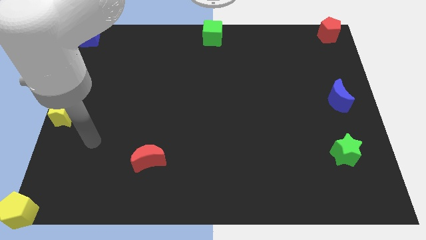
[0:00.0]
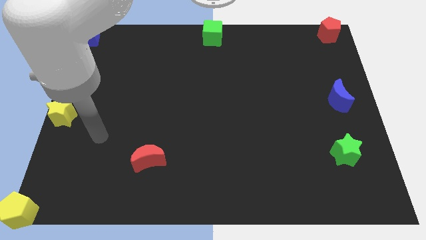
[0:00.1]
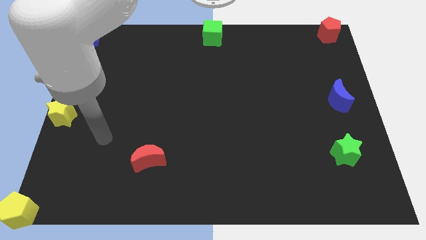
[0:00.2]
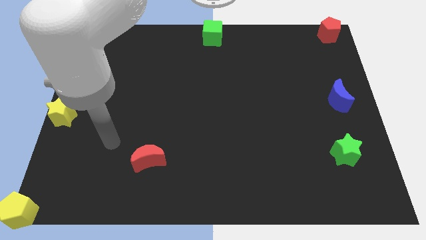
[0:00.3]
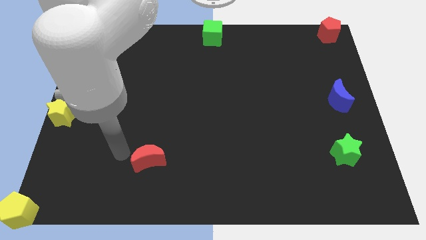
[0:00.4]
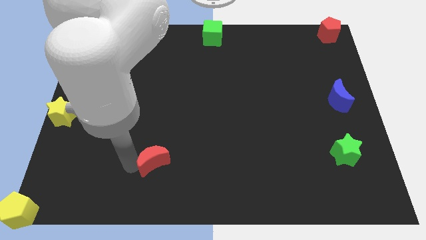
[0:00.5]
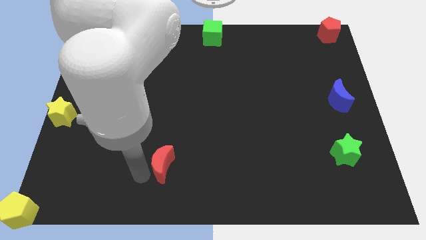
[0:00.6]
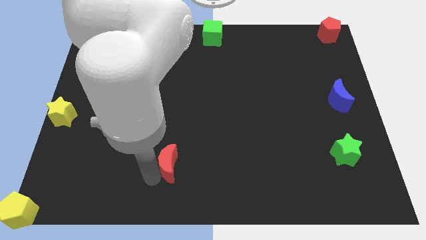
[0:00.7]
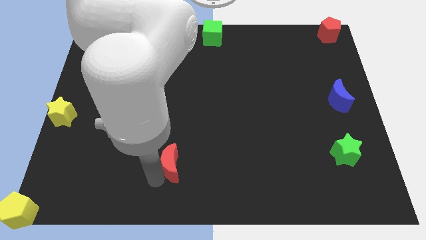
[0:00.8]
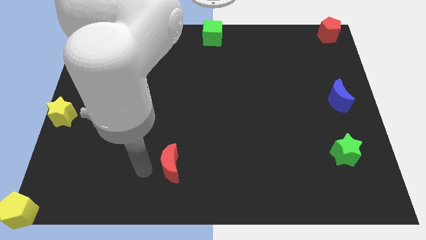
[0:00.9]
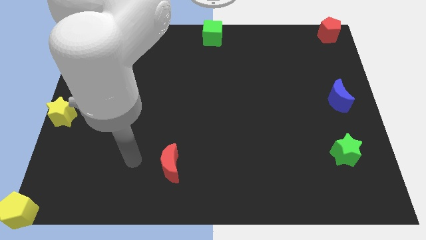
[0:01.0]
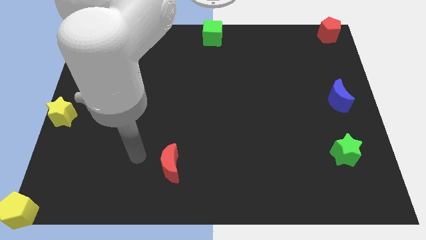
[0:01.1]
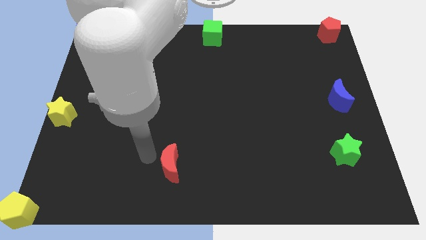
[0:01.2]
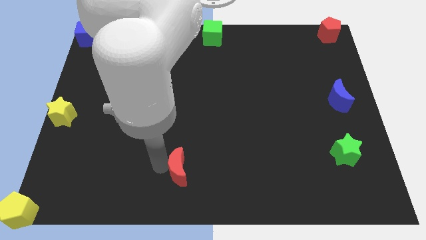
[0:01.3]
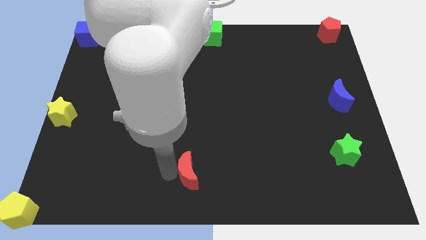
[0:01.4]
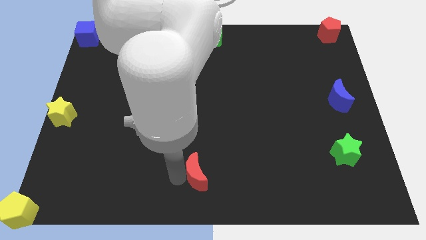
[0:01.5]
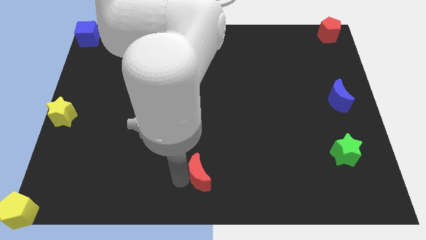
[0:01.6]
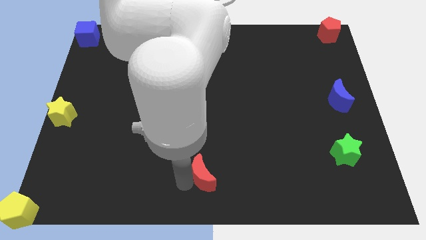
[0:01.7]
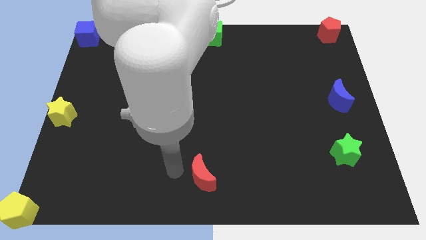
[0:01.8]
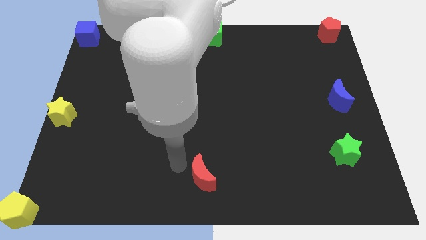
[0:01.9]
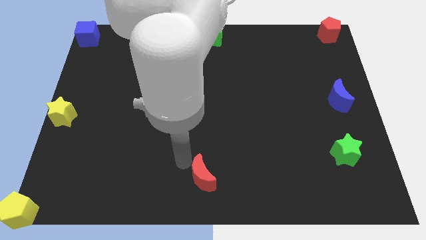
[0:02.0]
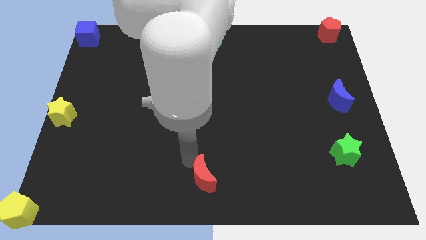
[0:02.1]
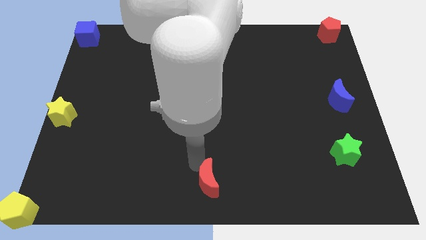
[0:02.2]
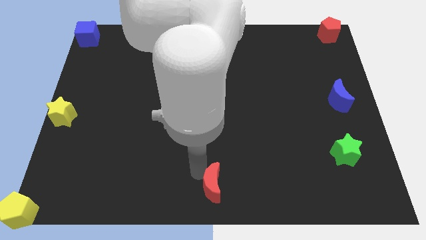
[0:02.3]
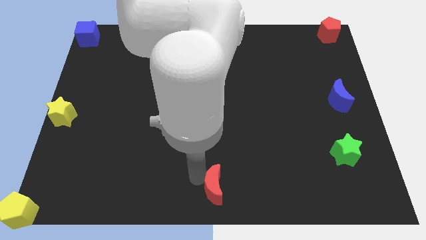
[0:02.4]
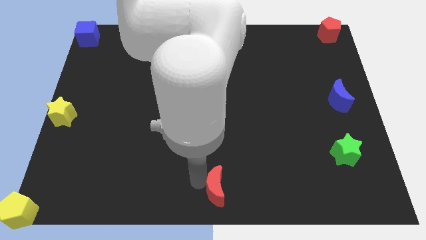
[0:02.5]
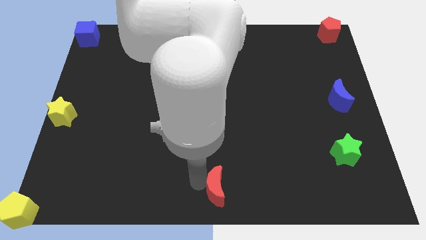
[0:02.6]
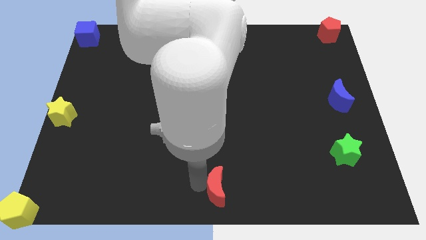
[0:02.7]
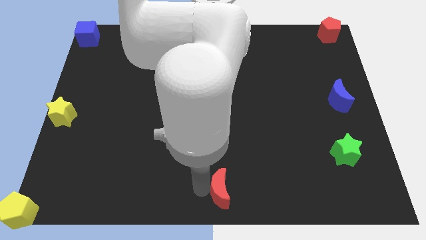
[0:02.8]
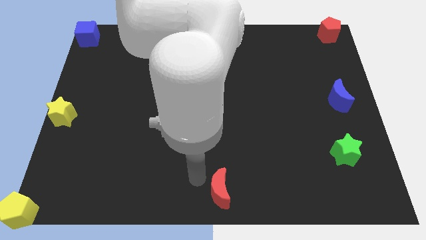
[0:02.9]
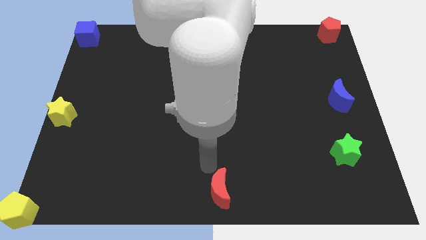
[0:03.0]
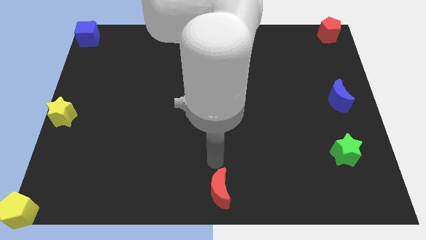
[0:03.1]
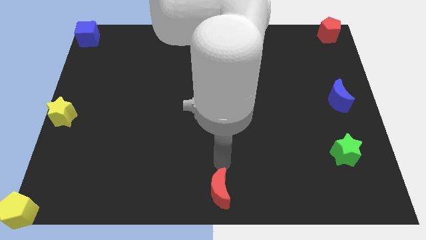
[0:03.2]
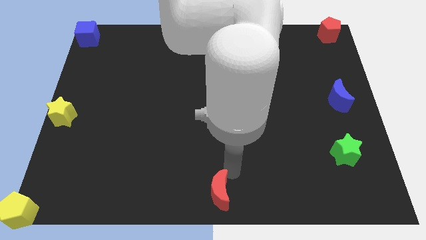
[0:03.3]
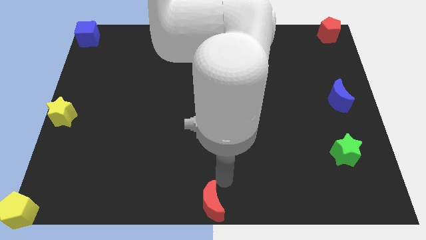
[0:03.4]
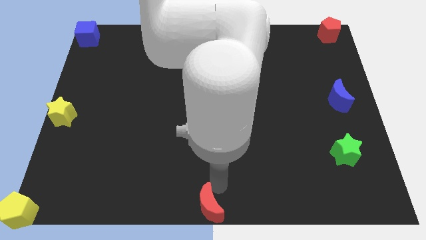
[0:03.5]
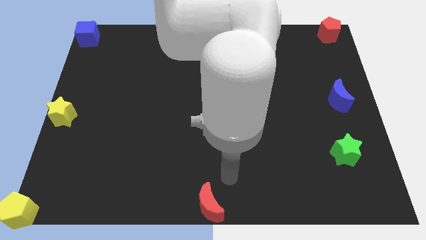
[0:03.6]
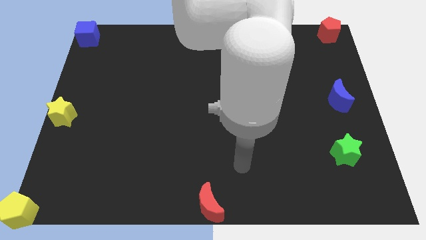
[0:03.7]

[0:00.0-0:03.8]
push the red moon to the bottom center

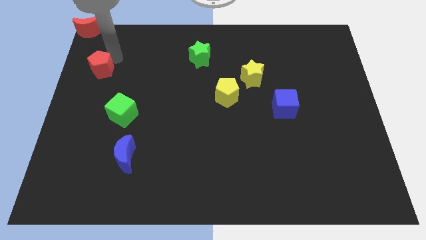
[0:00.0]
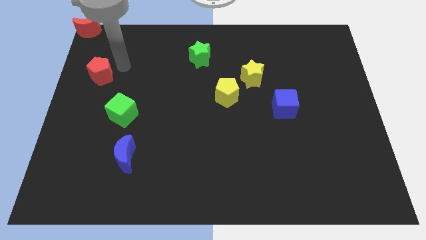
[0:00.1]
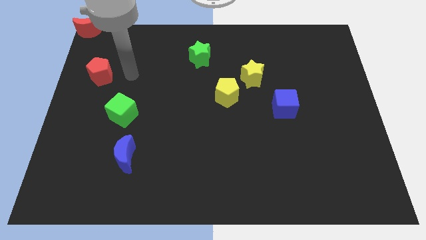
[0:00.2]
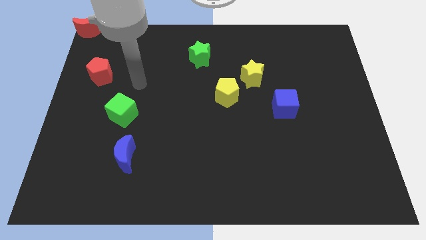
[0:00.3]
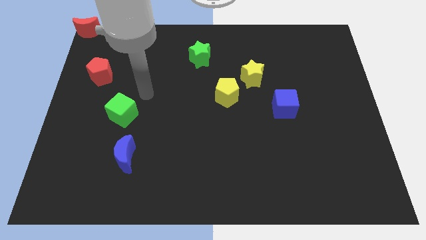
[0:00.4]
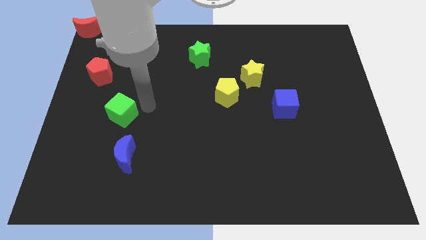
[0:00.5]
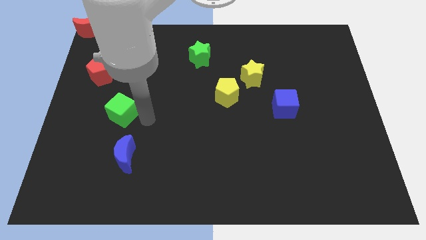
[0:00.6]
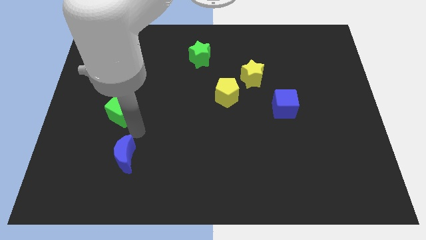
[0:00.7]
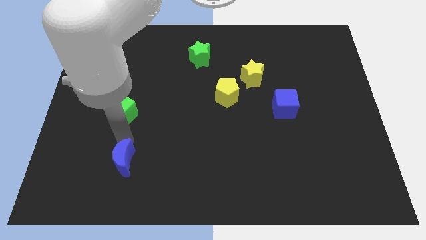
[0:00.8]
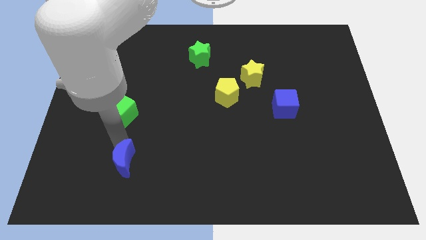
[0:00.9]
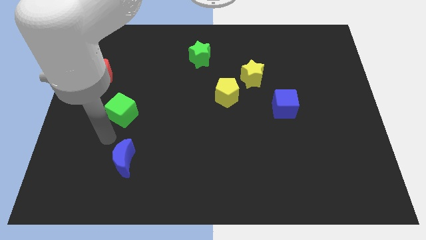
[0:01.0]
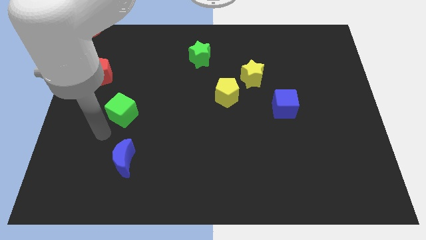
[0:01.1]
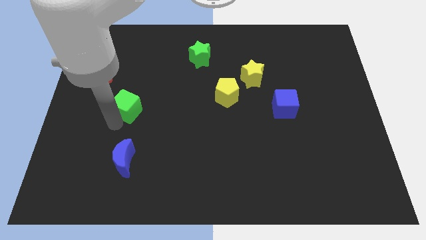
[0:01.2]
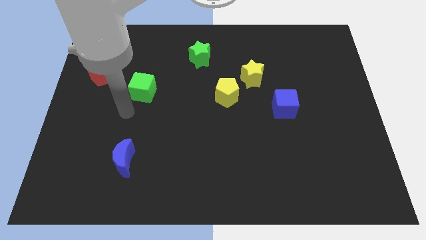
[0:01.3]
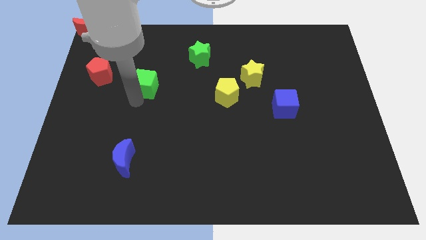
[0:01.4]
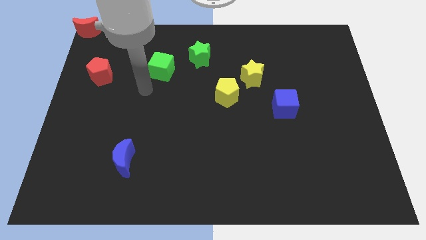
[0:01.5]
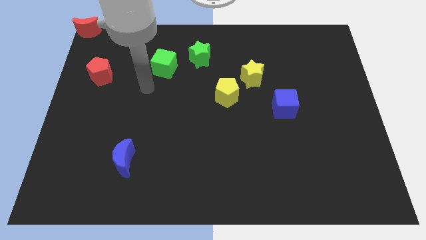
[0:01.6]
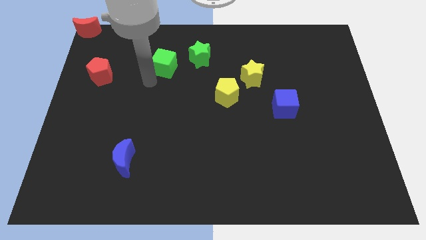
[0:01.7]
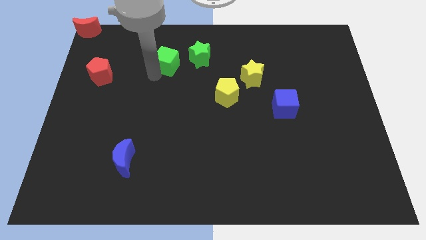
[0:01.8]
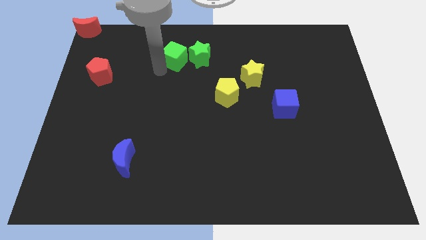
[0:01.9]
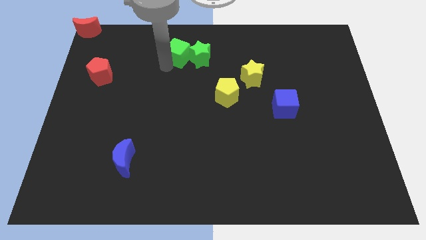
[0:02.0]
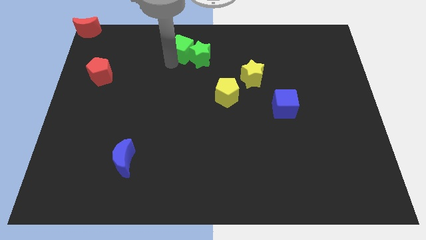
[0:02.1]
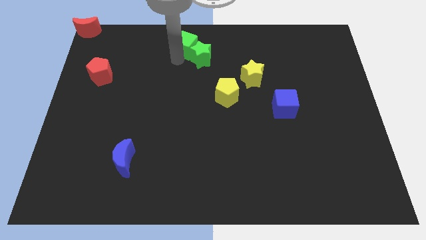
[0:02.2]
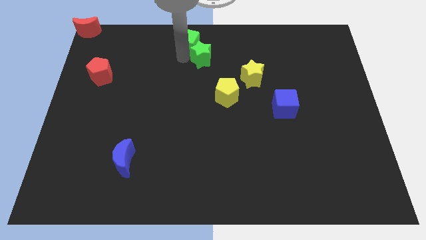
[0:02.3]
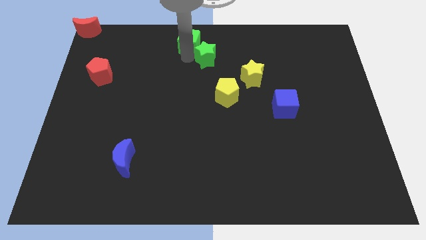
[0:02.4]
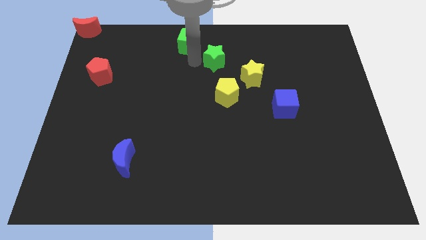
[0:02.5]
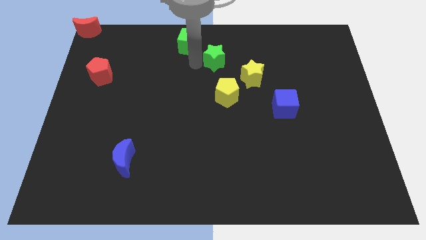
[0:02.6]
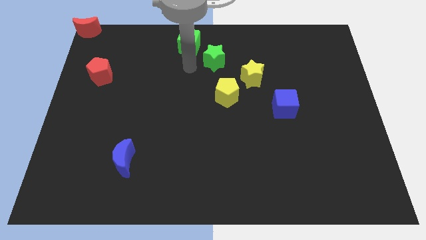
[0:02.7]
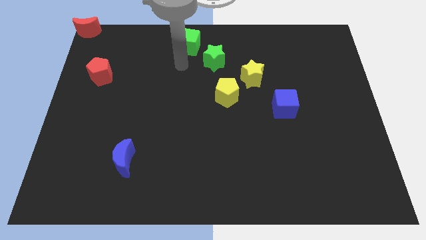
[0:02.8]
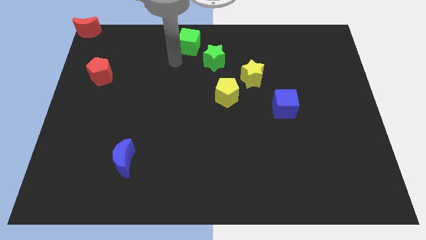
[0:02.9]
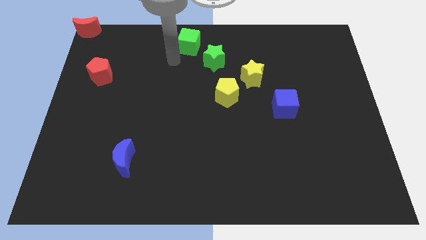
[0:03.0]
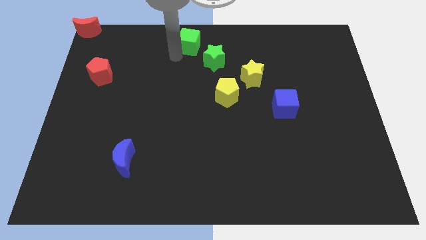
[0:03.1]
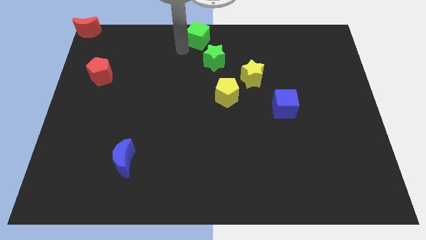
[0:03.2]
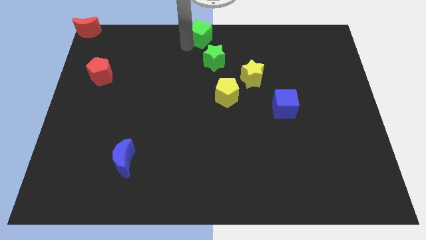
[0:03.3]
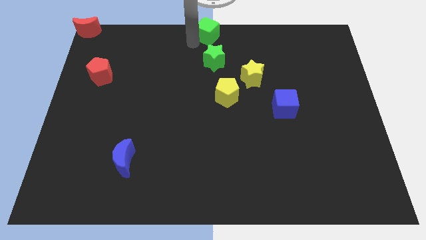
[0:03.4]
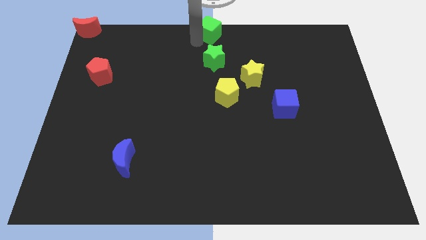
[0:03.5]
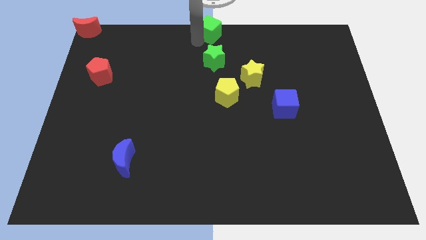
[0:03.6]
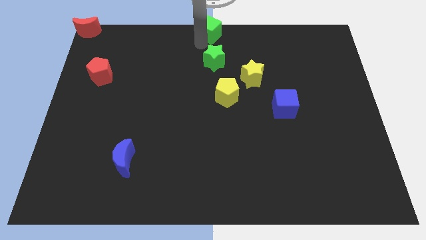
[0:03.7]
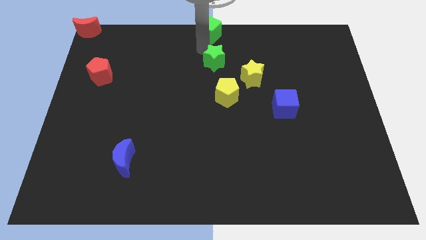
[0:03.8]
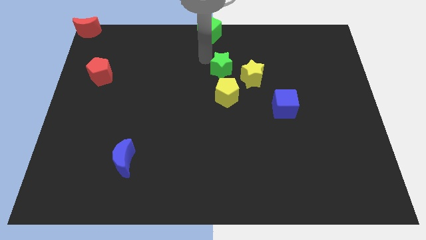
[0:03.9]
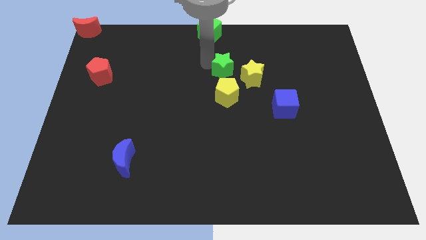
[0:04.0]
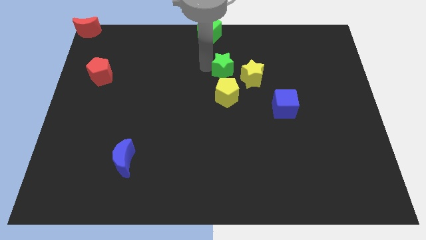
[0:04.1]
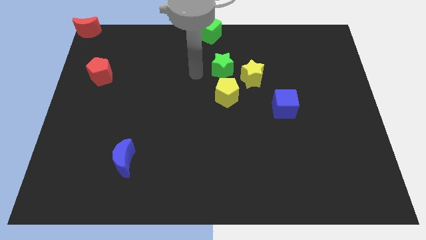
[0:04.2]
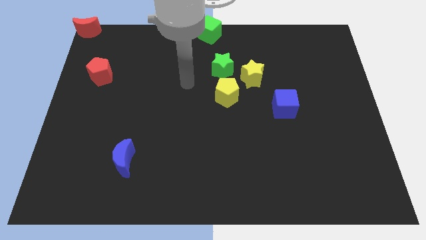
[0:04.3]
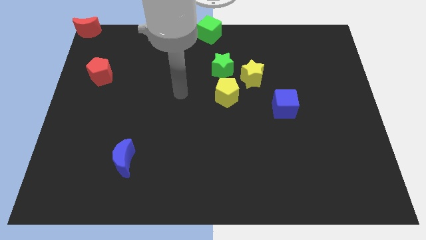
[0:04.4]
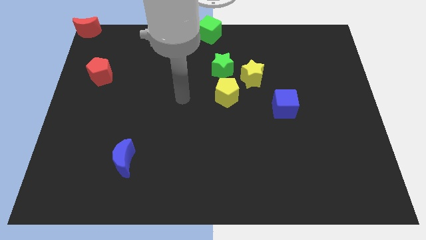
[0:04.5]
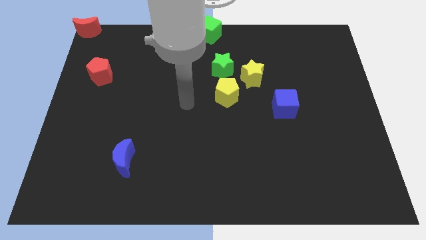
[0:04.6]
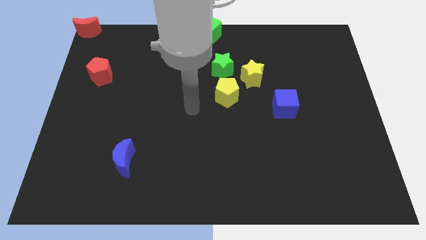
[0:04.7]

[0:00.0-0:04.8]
separate the green cube from the green star by placing it on the top centre

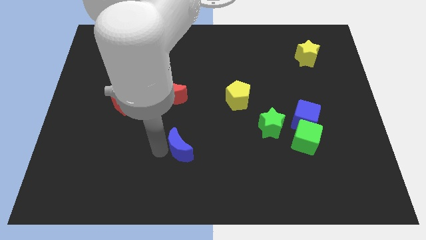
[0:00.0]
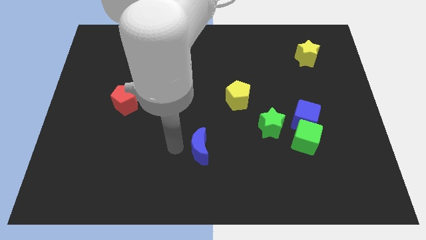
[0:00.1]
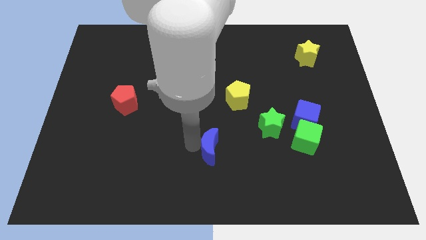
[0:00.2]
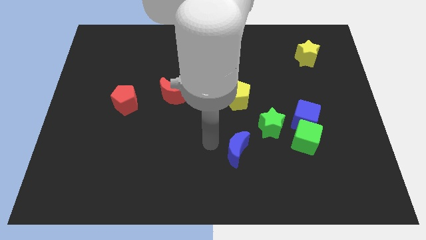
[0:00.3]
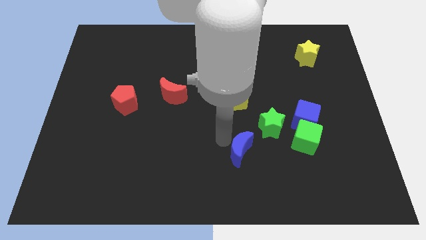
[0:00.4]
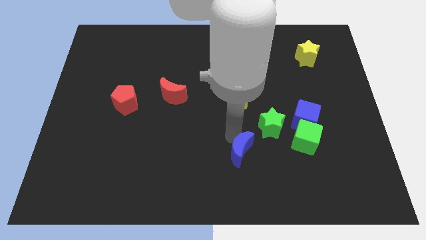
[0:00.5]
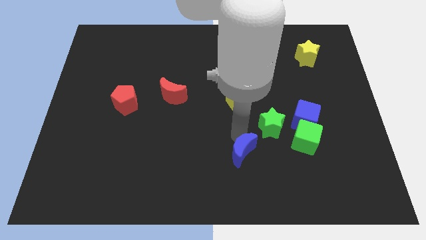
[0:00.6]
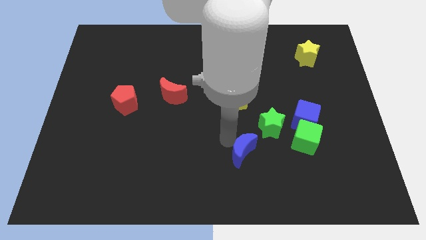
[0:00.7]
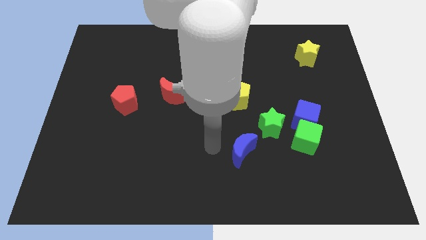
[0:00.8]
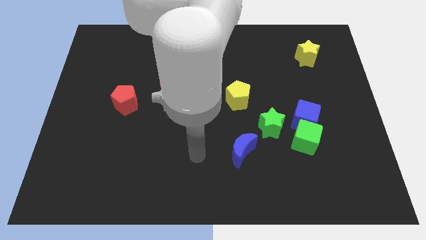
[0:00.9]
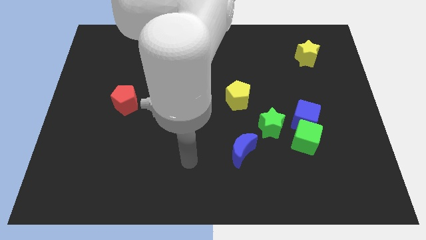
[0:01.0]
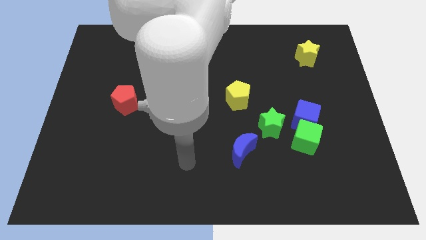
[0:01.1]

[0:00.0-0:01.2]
slide the blue moon to the bottom left of the green star
